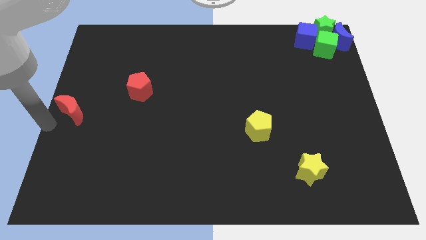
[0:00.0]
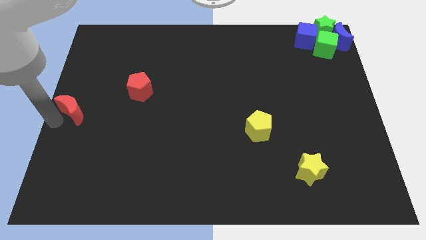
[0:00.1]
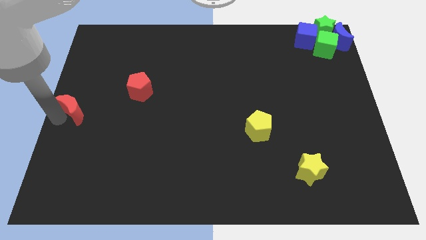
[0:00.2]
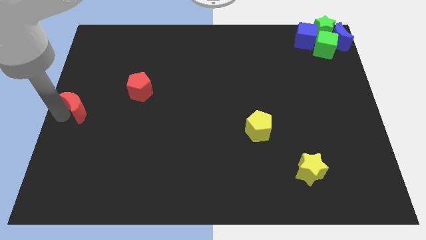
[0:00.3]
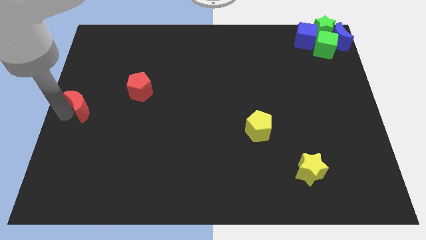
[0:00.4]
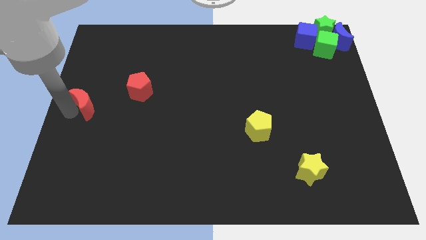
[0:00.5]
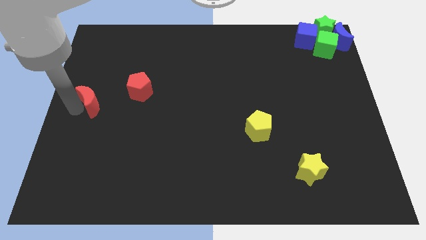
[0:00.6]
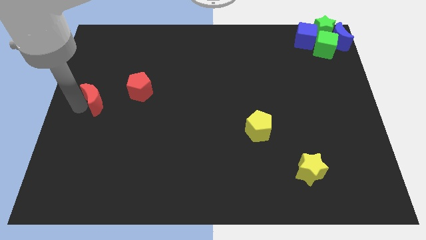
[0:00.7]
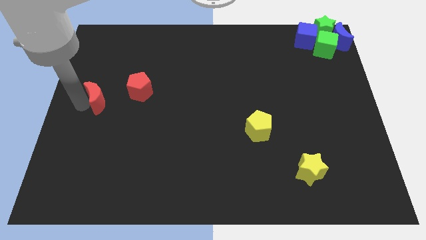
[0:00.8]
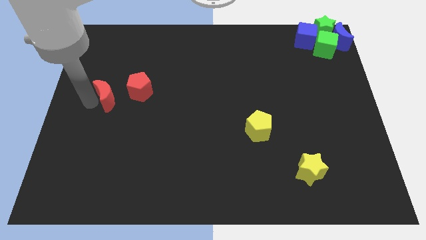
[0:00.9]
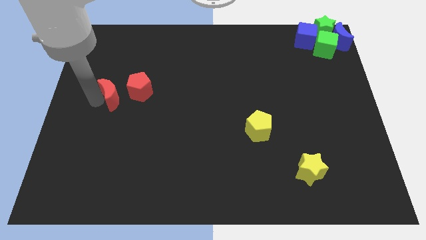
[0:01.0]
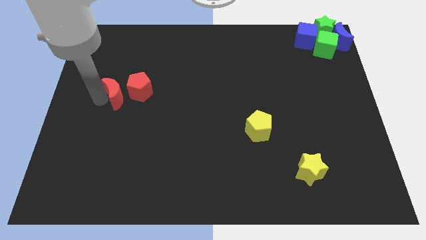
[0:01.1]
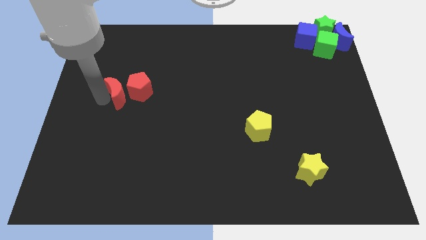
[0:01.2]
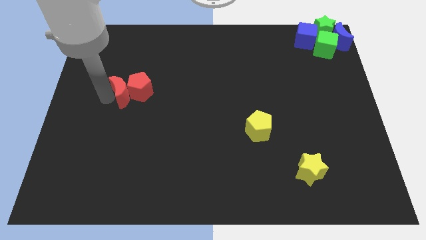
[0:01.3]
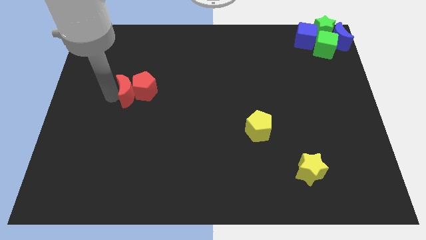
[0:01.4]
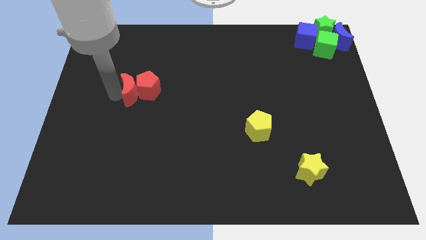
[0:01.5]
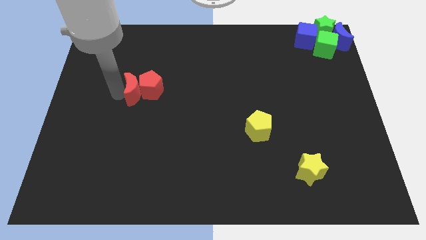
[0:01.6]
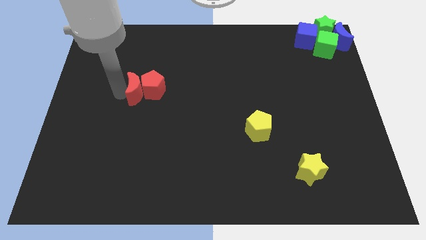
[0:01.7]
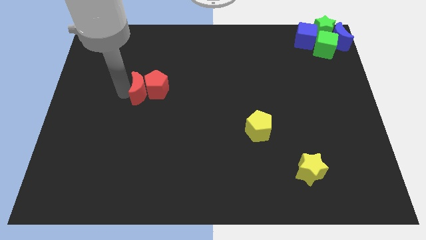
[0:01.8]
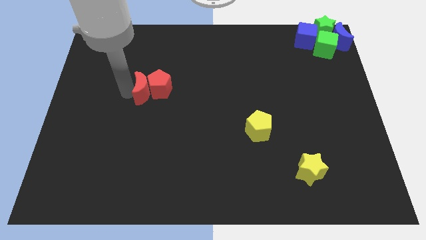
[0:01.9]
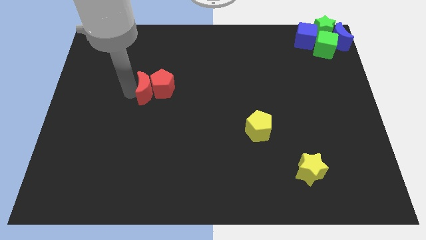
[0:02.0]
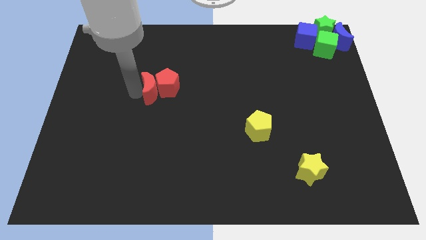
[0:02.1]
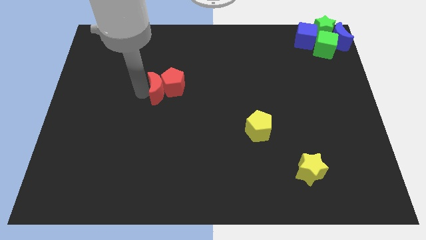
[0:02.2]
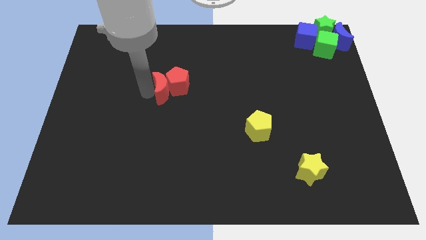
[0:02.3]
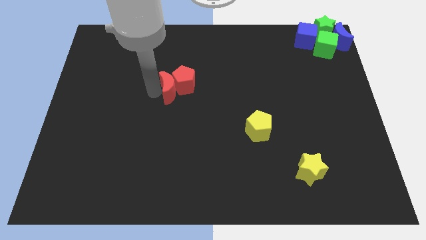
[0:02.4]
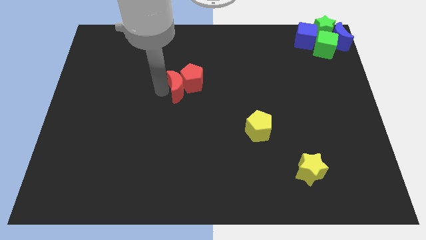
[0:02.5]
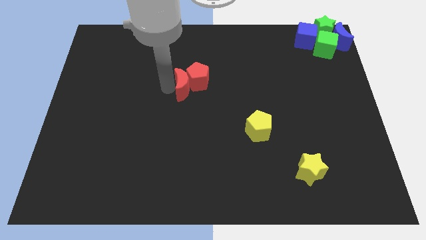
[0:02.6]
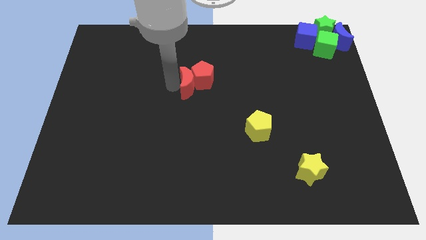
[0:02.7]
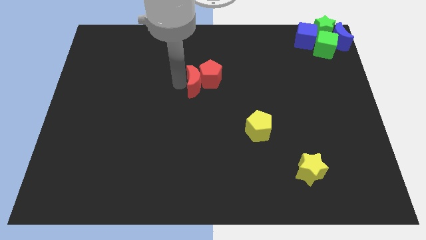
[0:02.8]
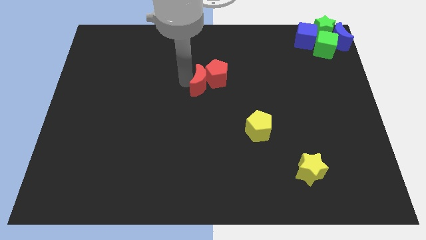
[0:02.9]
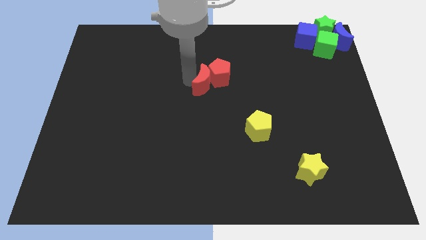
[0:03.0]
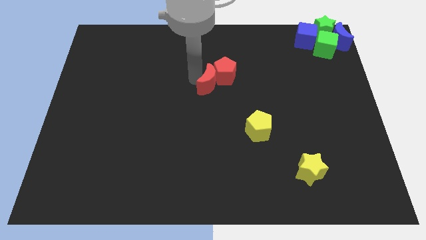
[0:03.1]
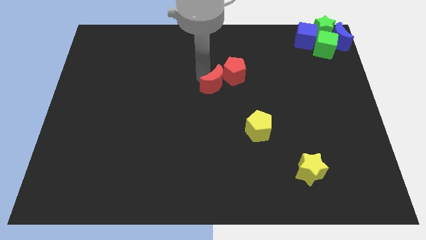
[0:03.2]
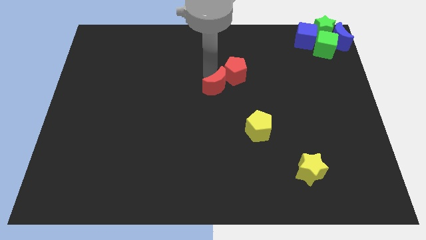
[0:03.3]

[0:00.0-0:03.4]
move the red blocks towards the top right

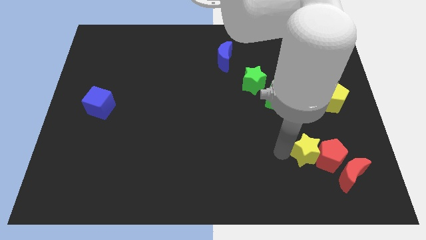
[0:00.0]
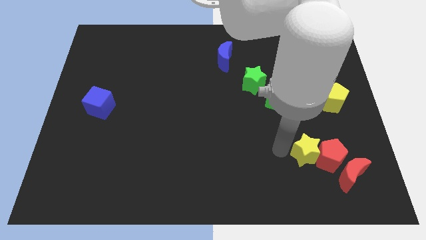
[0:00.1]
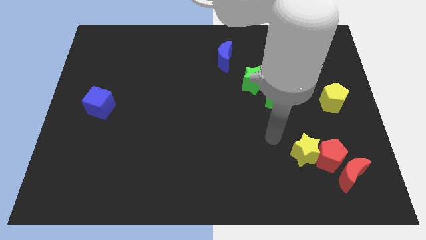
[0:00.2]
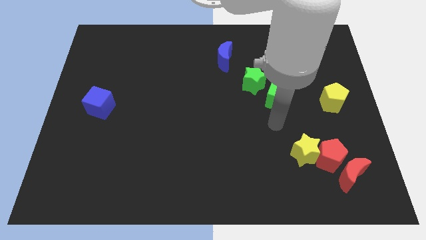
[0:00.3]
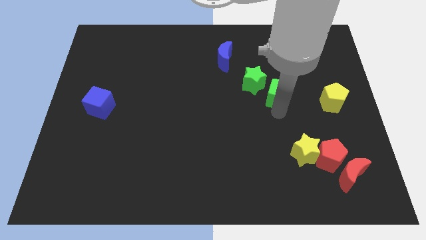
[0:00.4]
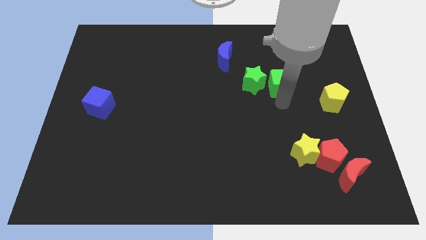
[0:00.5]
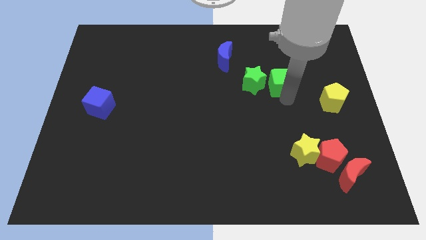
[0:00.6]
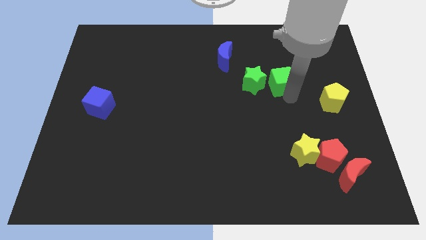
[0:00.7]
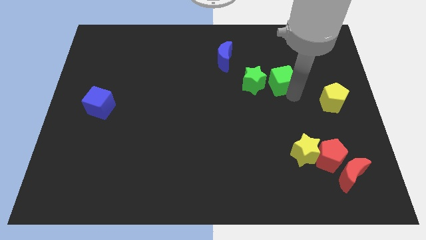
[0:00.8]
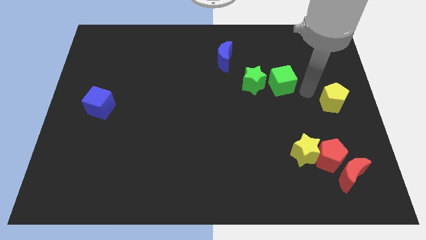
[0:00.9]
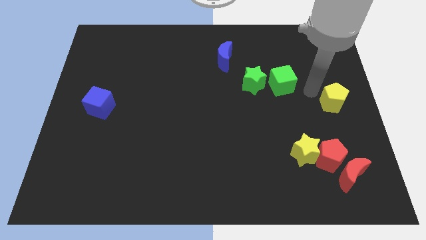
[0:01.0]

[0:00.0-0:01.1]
adjust the green cube parallel right to the green star

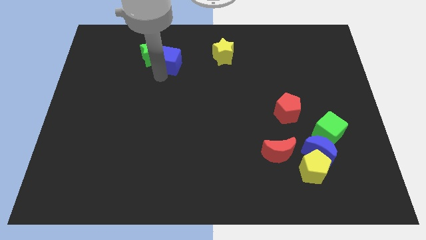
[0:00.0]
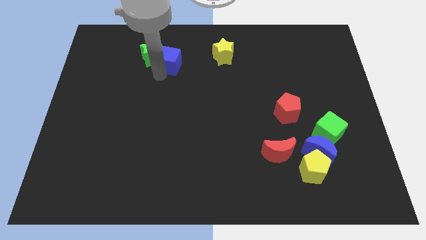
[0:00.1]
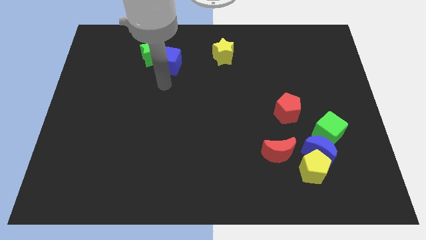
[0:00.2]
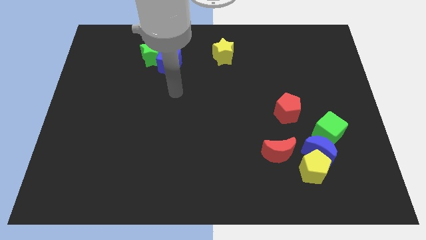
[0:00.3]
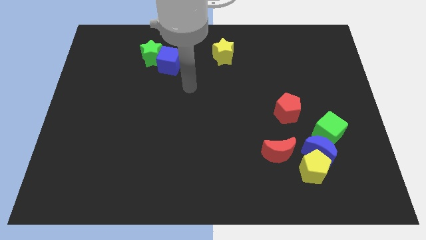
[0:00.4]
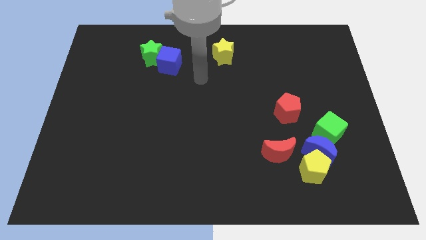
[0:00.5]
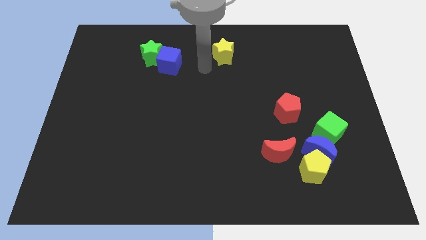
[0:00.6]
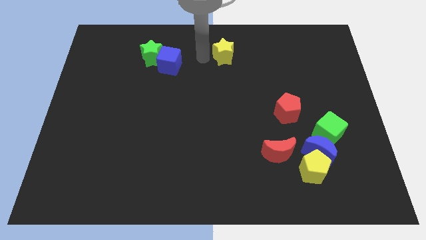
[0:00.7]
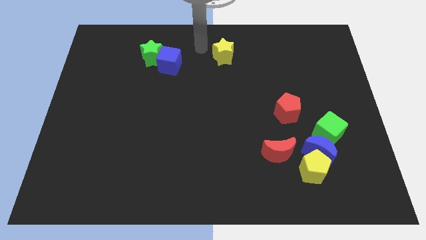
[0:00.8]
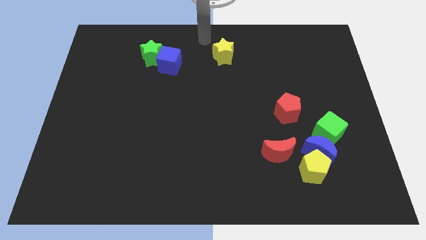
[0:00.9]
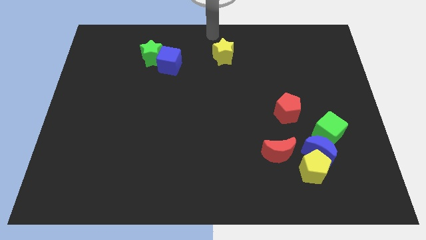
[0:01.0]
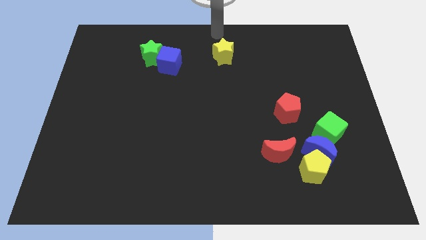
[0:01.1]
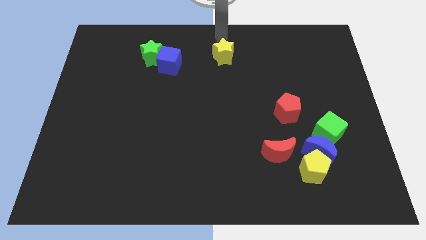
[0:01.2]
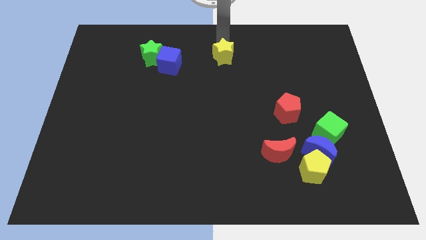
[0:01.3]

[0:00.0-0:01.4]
move your arm away from the blue cube

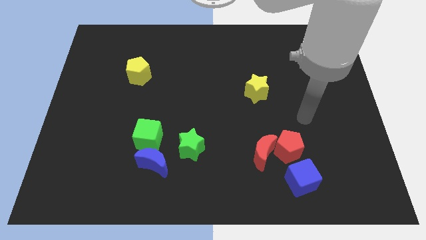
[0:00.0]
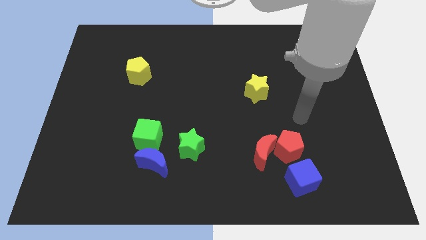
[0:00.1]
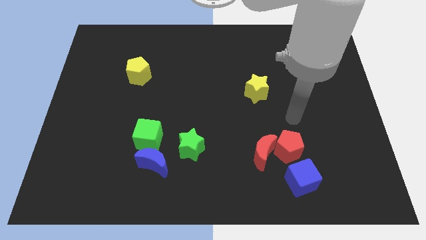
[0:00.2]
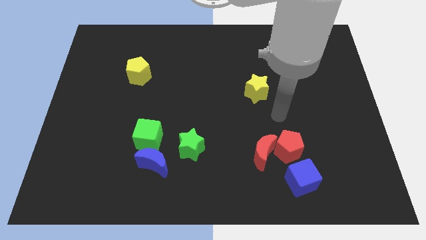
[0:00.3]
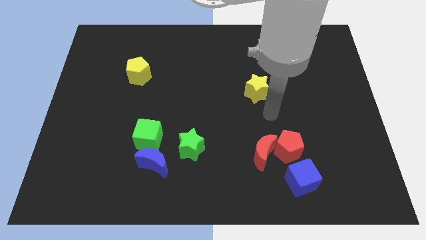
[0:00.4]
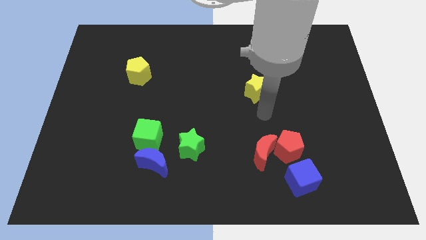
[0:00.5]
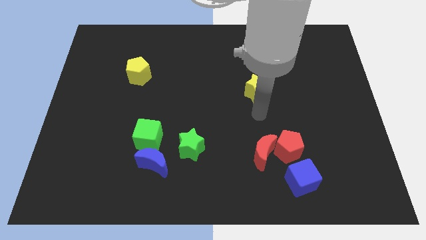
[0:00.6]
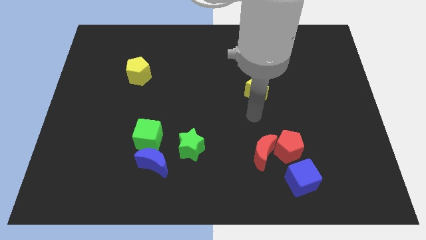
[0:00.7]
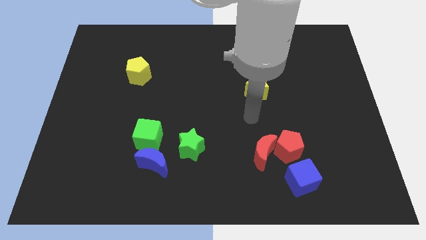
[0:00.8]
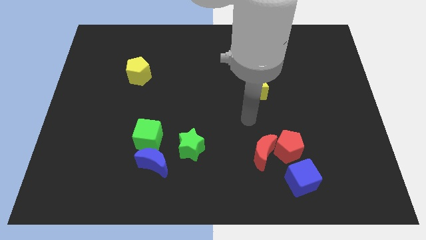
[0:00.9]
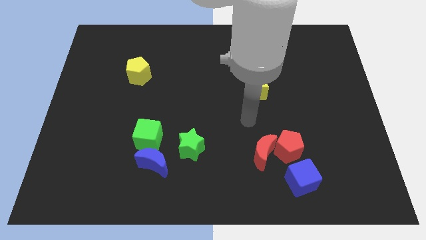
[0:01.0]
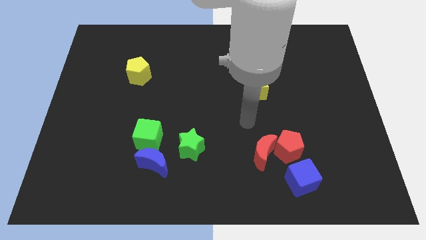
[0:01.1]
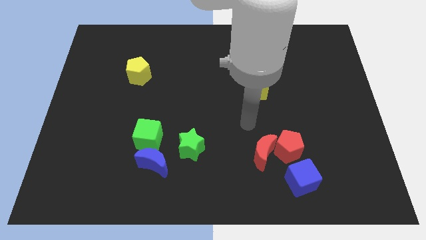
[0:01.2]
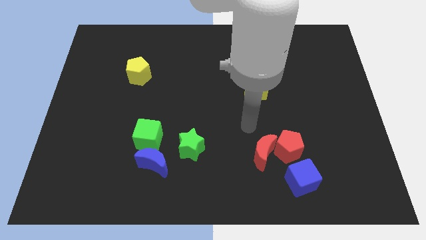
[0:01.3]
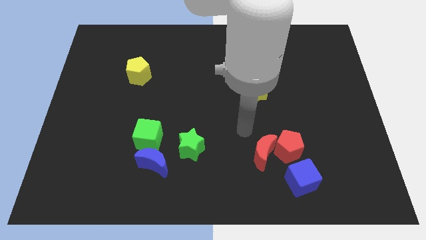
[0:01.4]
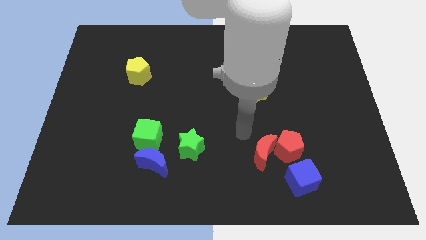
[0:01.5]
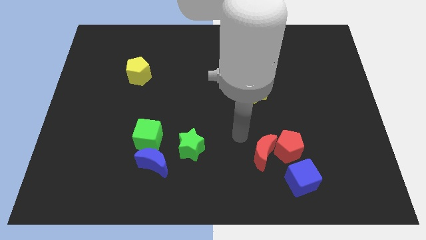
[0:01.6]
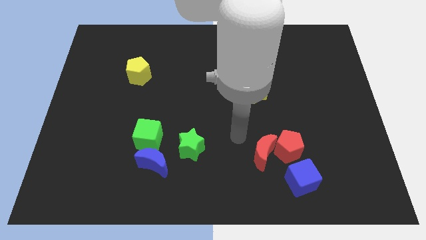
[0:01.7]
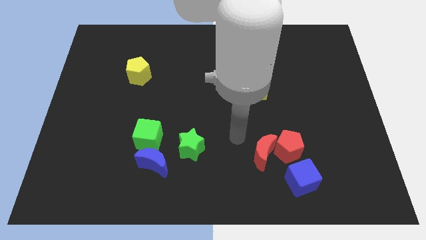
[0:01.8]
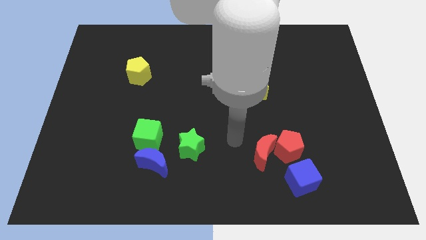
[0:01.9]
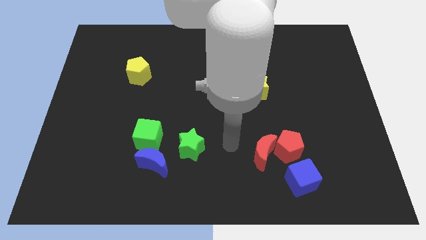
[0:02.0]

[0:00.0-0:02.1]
slide your arm in between red moon and green star

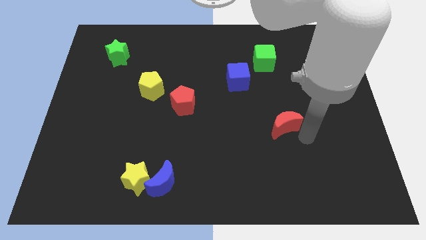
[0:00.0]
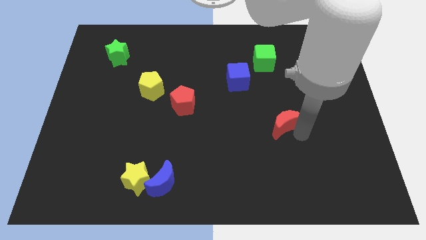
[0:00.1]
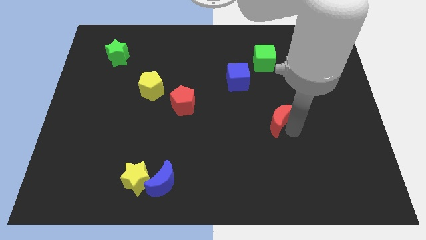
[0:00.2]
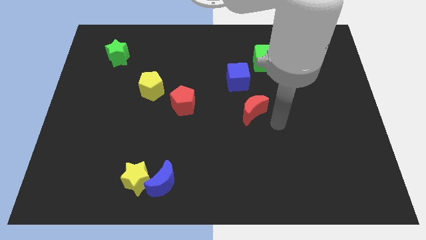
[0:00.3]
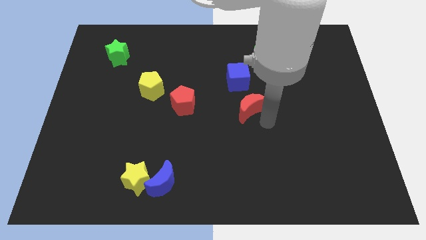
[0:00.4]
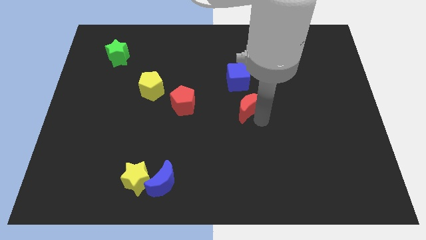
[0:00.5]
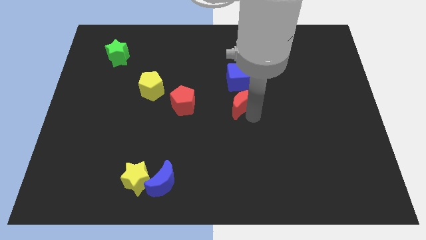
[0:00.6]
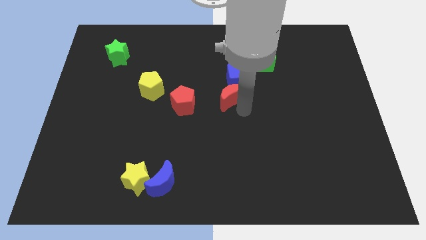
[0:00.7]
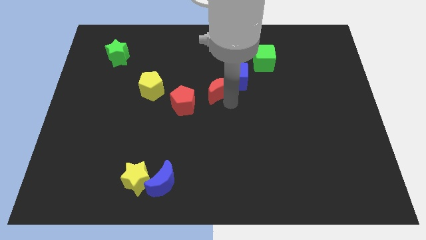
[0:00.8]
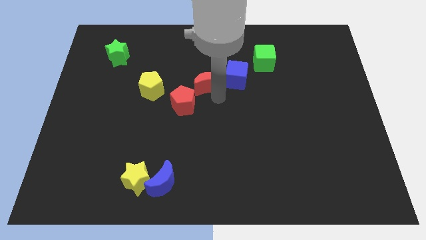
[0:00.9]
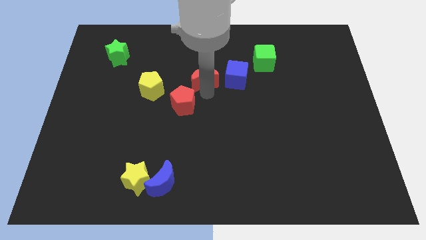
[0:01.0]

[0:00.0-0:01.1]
slide red moon to the left of blue cube
